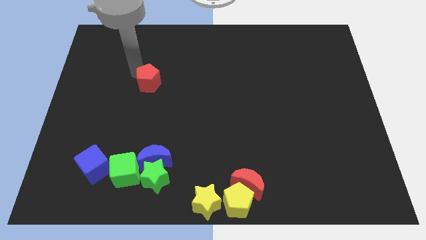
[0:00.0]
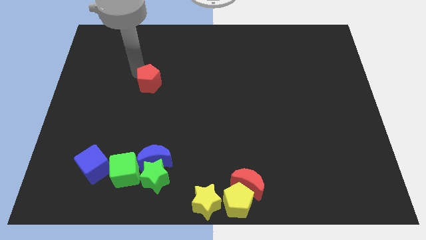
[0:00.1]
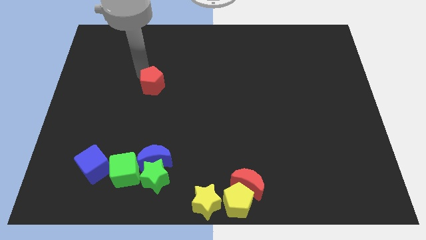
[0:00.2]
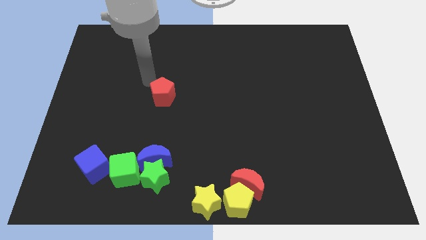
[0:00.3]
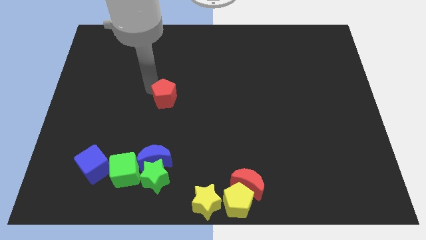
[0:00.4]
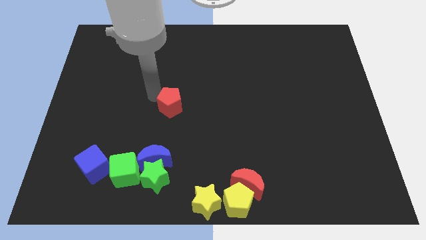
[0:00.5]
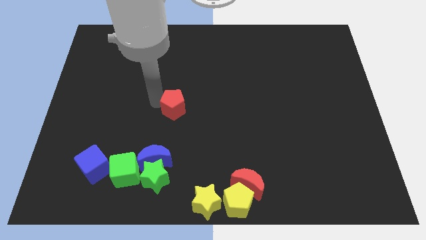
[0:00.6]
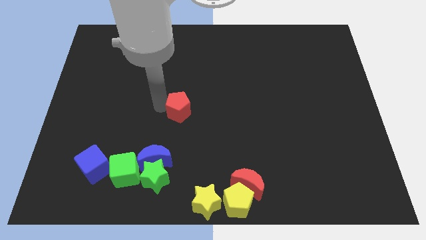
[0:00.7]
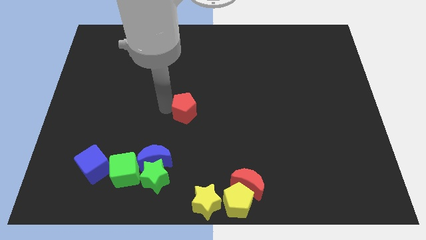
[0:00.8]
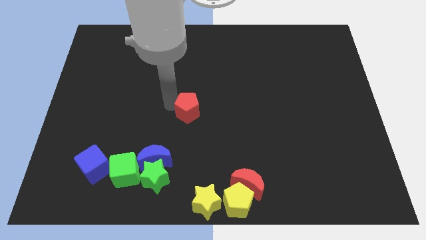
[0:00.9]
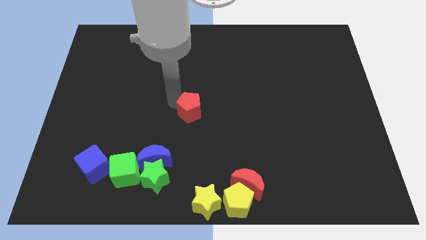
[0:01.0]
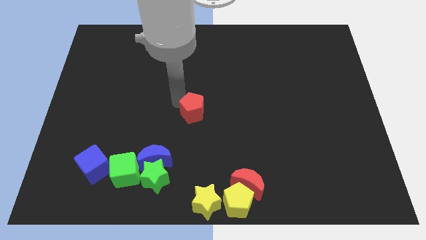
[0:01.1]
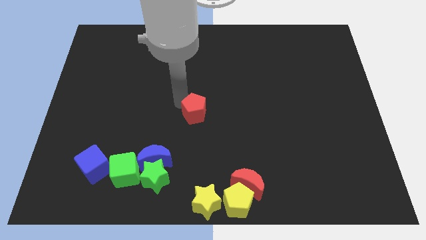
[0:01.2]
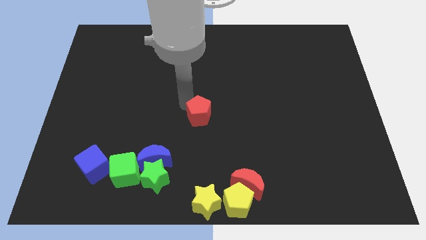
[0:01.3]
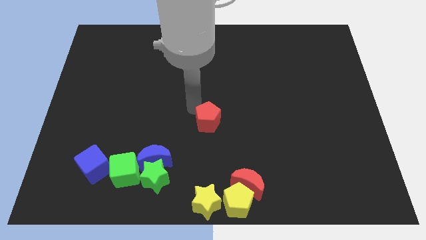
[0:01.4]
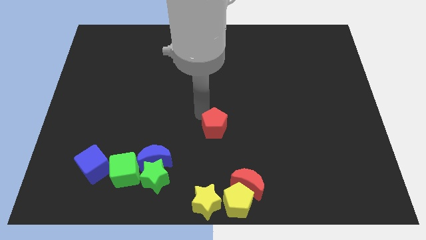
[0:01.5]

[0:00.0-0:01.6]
put the red pentagon vertically above the yellow star

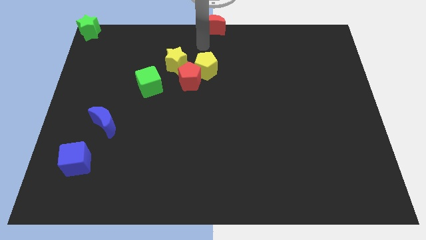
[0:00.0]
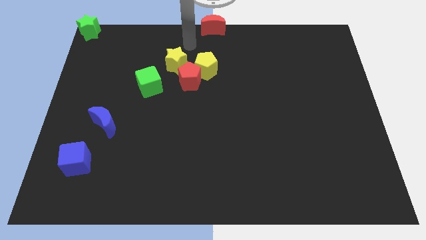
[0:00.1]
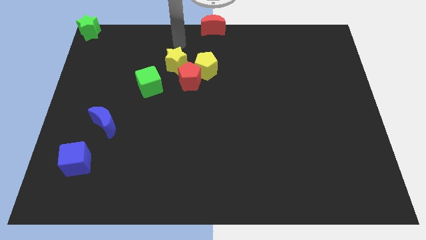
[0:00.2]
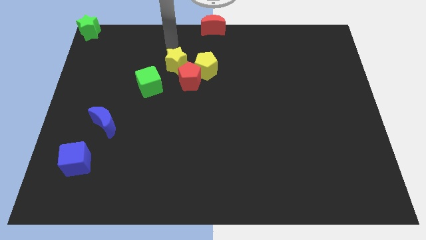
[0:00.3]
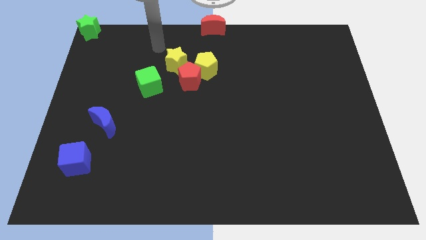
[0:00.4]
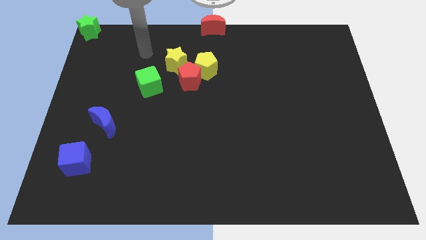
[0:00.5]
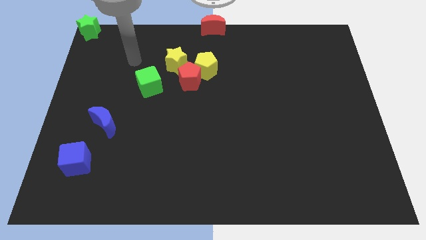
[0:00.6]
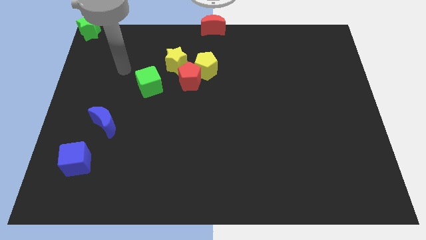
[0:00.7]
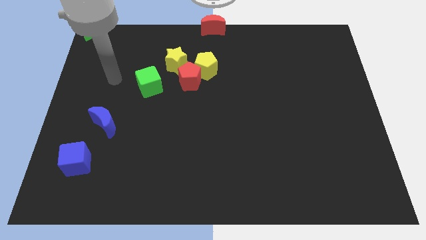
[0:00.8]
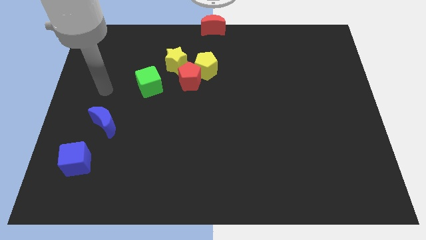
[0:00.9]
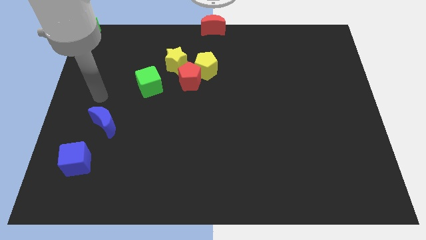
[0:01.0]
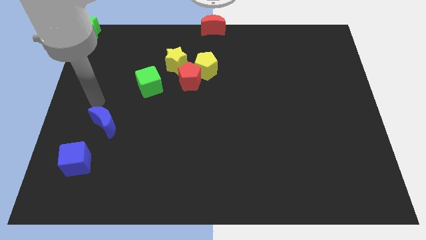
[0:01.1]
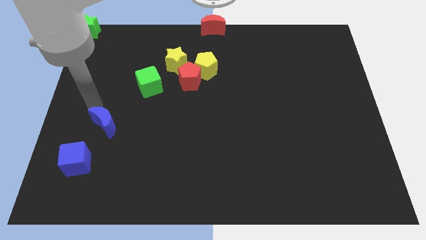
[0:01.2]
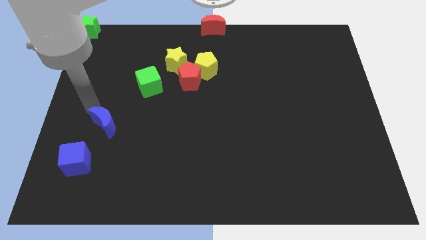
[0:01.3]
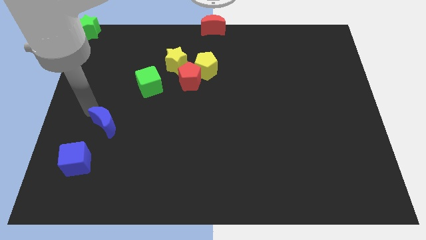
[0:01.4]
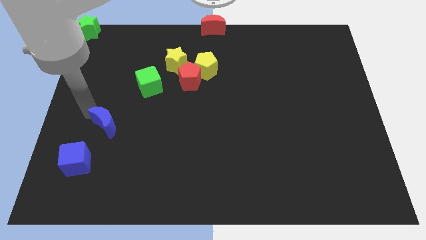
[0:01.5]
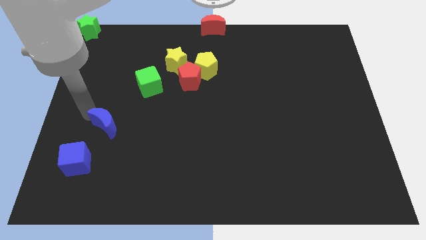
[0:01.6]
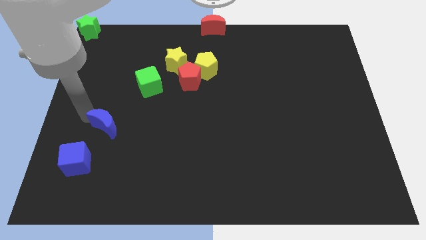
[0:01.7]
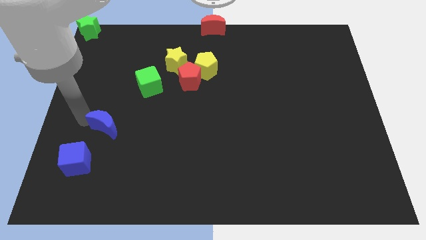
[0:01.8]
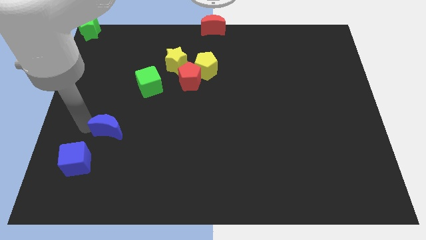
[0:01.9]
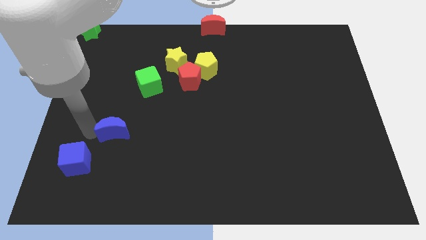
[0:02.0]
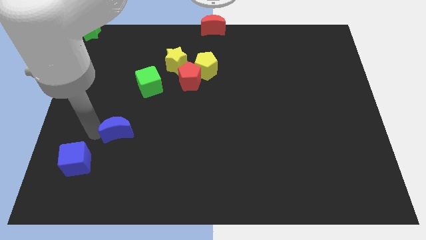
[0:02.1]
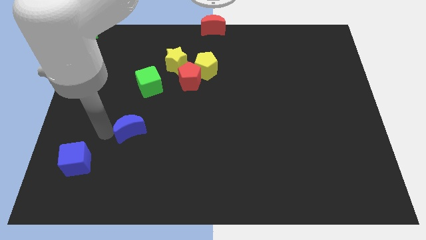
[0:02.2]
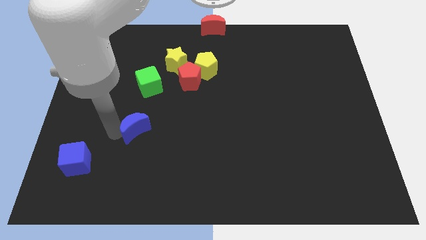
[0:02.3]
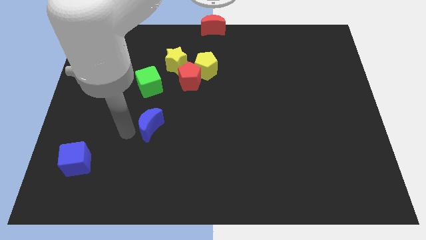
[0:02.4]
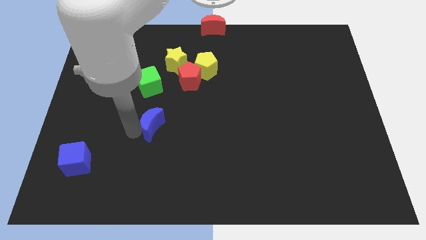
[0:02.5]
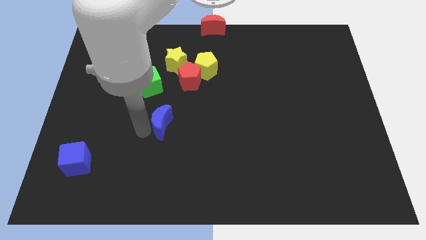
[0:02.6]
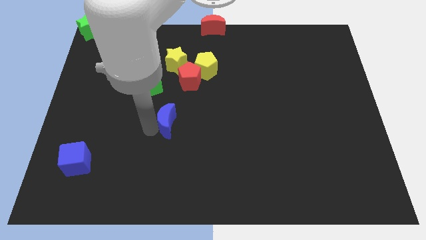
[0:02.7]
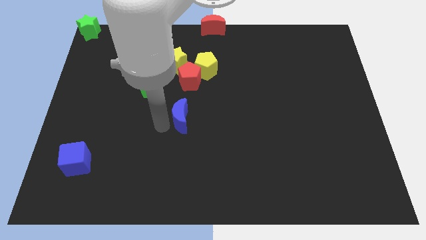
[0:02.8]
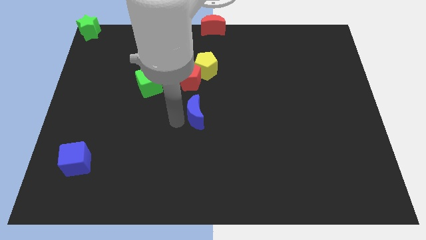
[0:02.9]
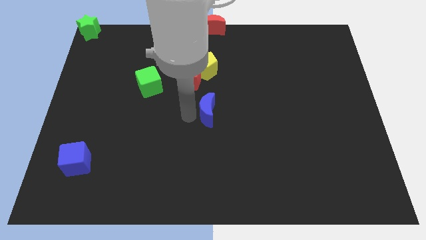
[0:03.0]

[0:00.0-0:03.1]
place the blue moon below the red pentagon

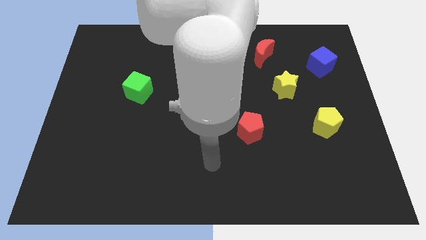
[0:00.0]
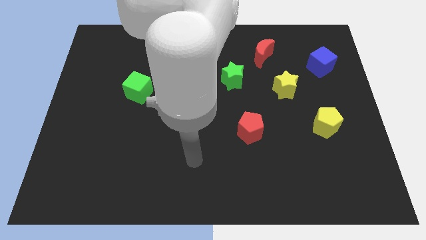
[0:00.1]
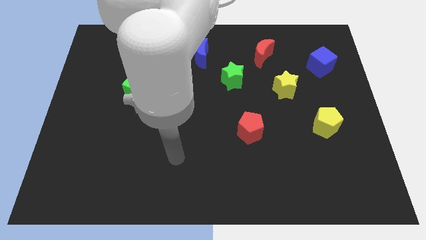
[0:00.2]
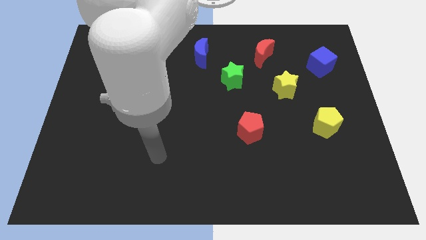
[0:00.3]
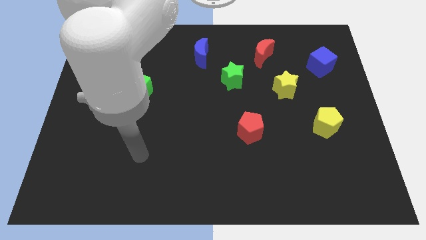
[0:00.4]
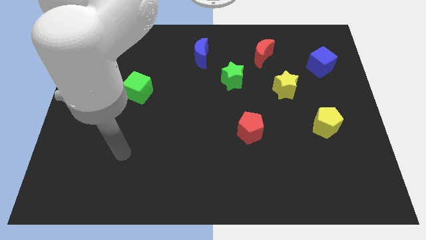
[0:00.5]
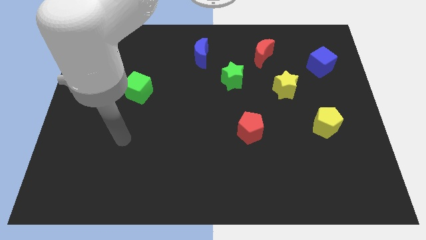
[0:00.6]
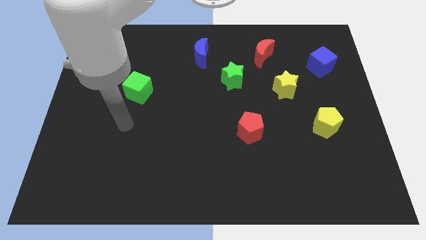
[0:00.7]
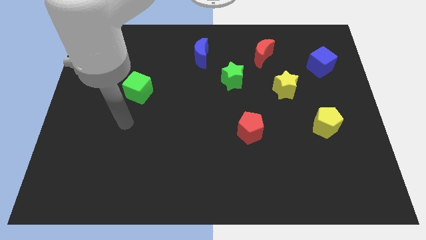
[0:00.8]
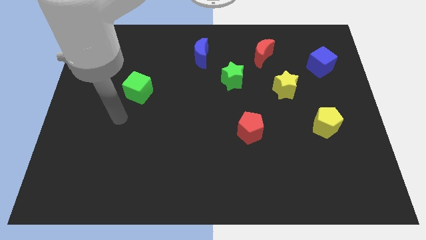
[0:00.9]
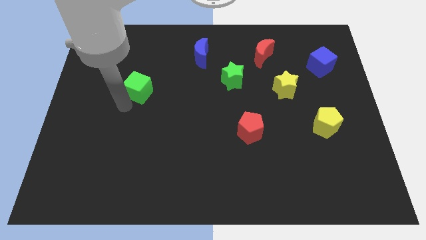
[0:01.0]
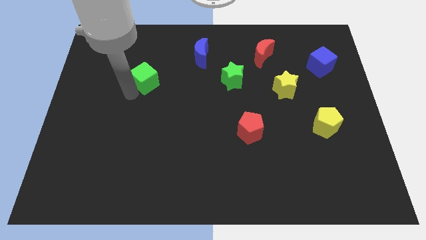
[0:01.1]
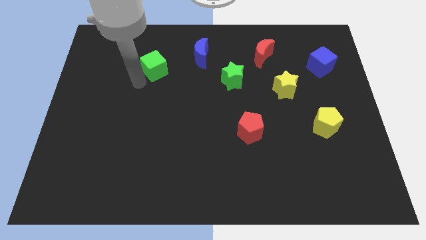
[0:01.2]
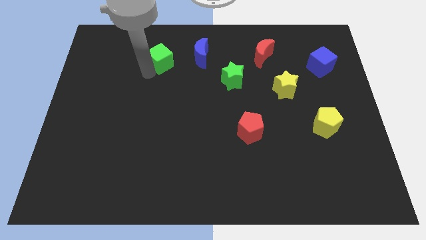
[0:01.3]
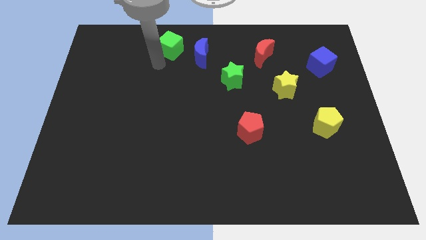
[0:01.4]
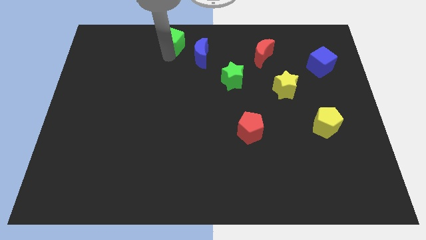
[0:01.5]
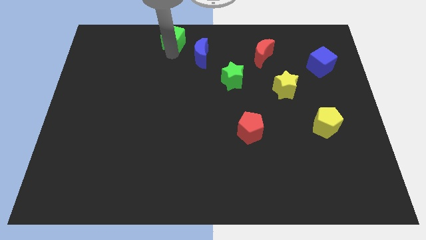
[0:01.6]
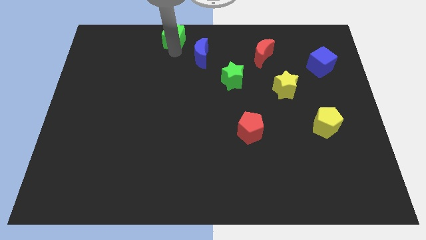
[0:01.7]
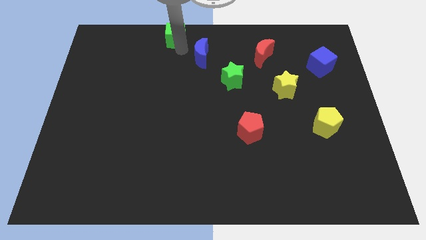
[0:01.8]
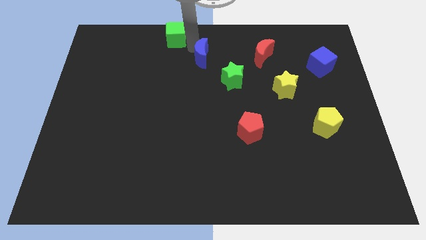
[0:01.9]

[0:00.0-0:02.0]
move the green cube to the top center of the board

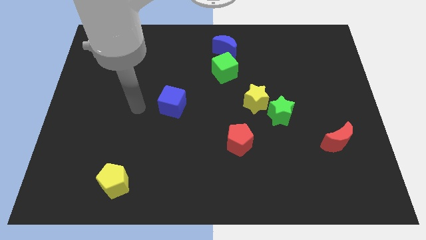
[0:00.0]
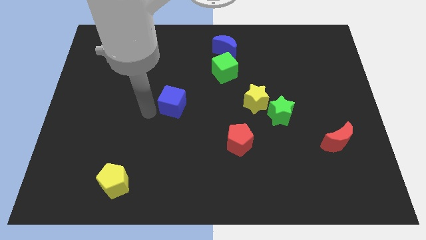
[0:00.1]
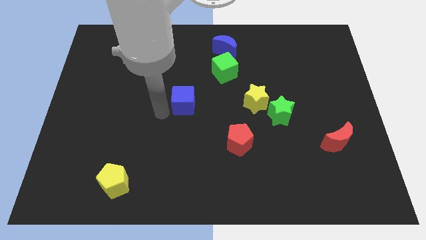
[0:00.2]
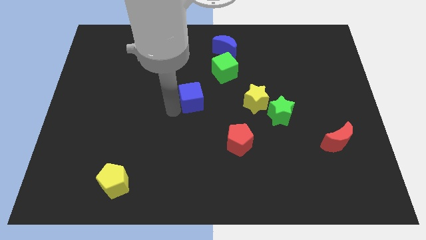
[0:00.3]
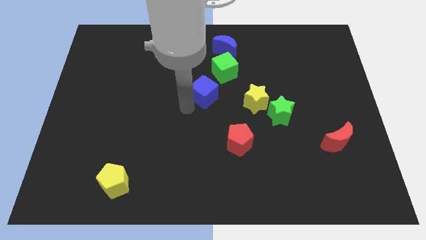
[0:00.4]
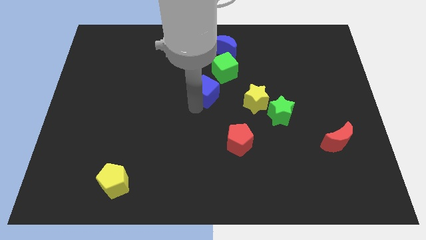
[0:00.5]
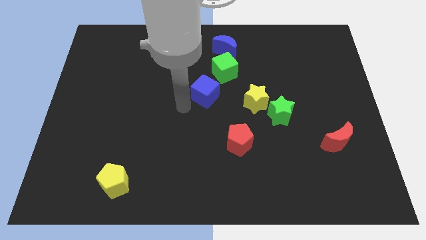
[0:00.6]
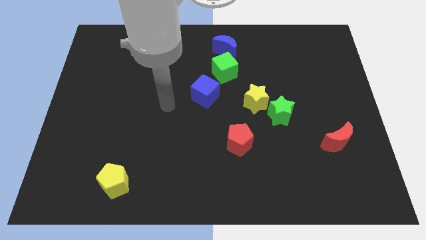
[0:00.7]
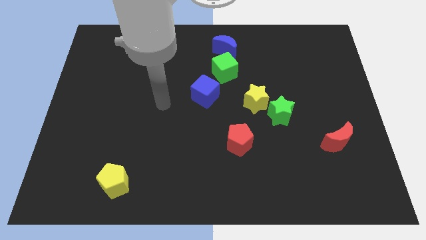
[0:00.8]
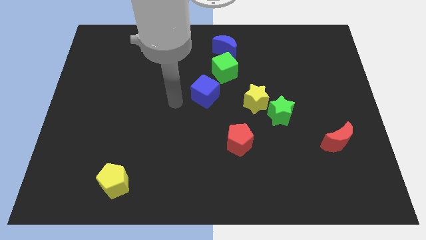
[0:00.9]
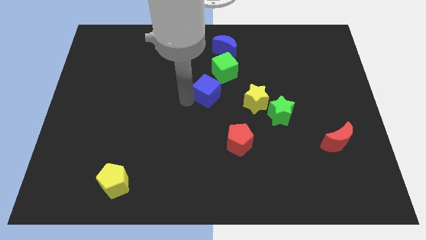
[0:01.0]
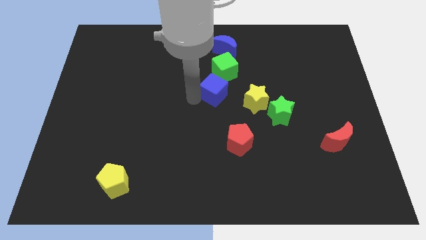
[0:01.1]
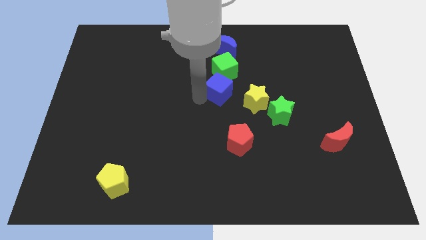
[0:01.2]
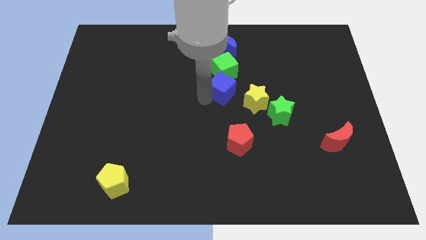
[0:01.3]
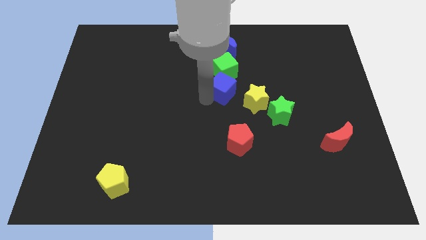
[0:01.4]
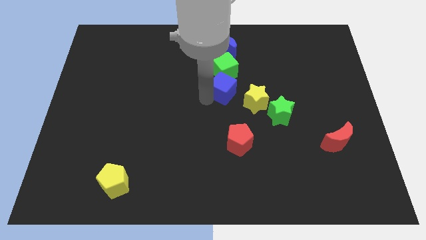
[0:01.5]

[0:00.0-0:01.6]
move the blue cube into the bottom side of the green cube

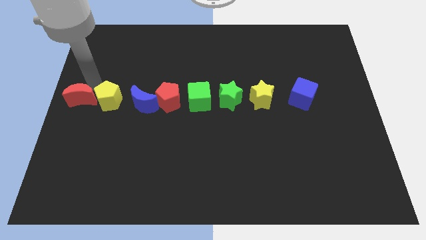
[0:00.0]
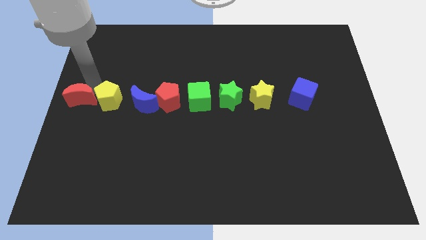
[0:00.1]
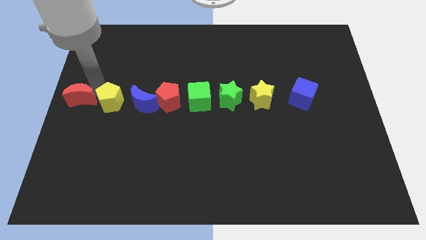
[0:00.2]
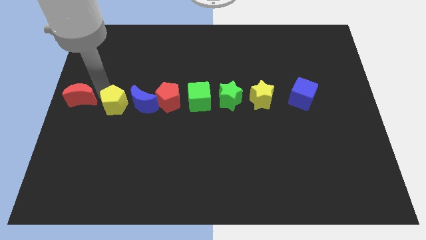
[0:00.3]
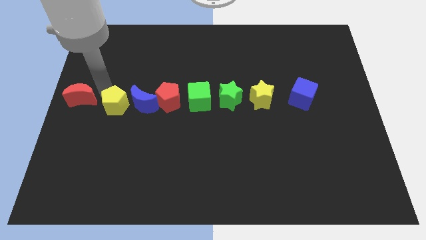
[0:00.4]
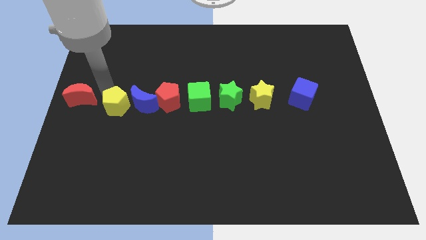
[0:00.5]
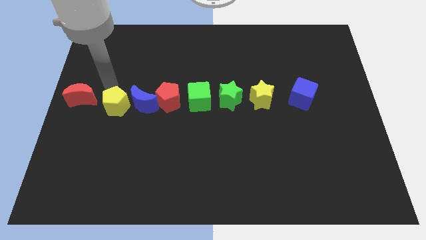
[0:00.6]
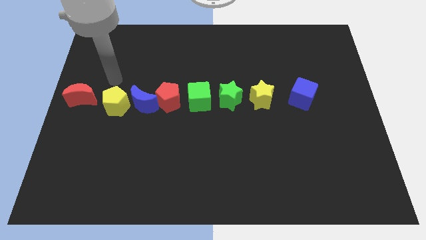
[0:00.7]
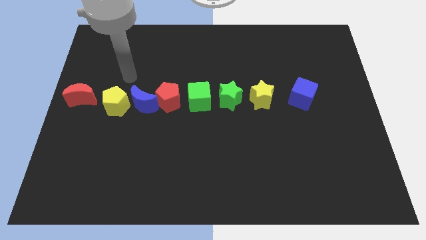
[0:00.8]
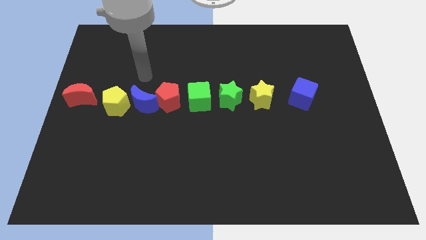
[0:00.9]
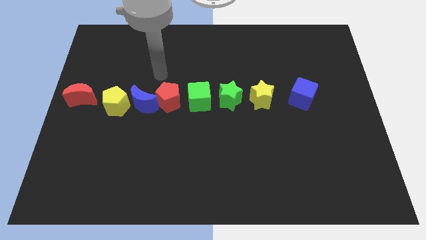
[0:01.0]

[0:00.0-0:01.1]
push the yellow pentagon slightly downwards
